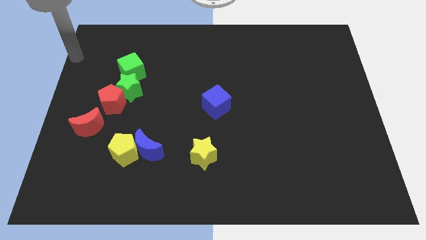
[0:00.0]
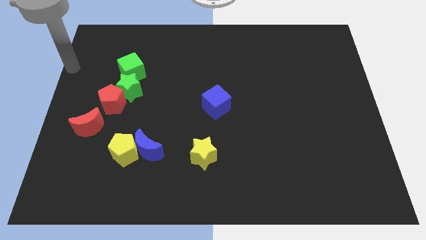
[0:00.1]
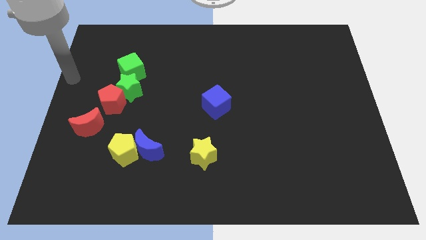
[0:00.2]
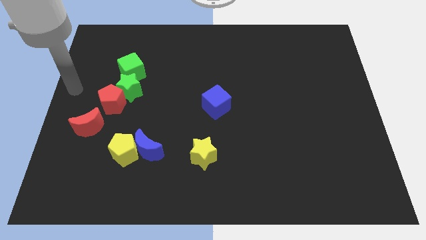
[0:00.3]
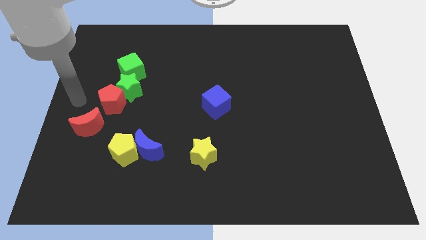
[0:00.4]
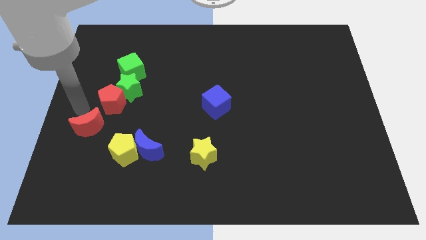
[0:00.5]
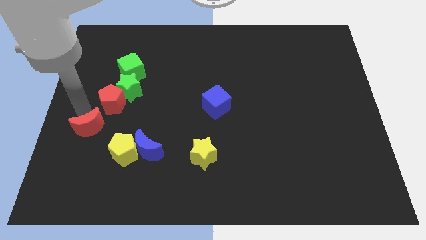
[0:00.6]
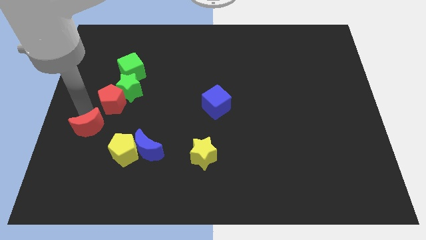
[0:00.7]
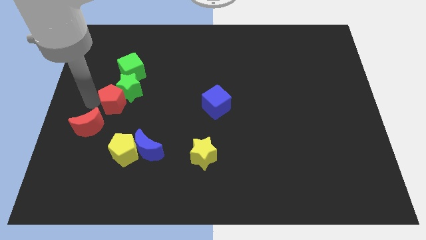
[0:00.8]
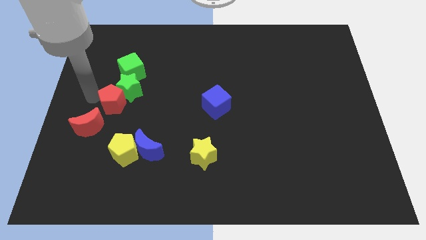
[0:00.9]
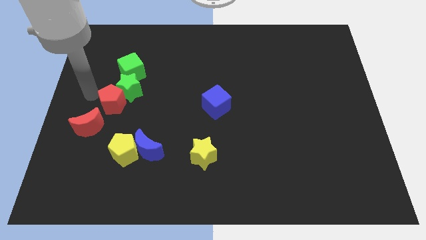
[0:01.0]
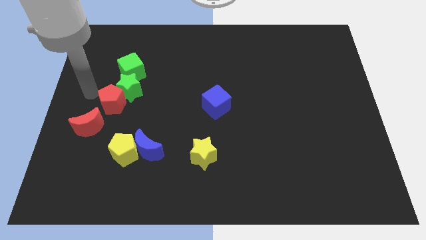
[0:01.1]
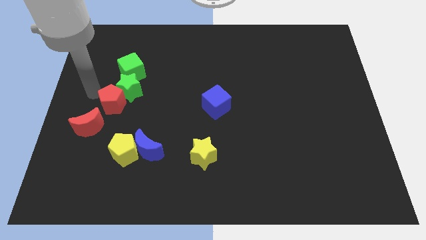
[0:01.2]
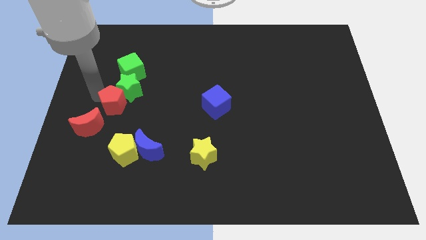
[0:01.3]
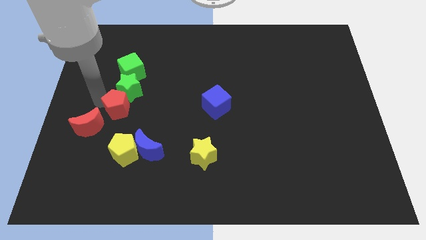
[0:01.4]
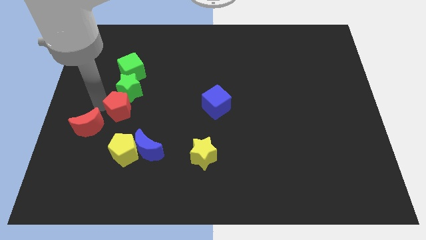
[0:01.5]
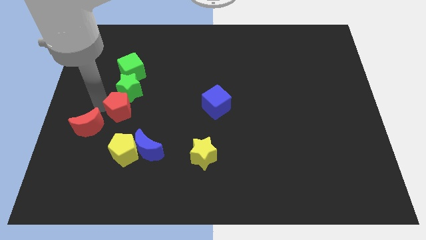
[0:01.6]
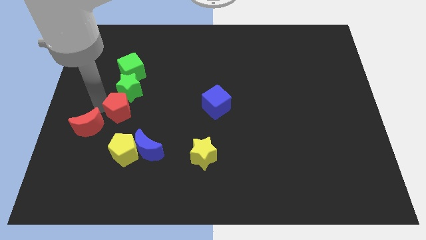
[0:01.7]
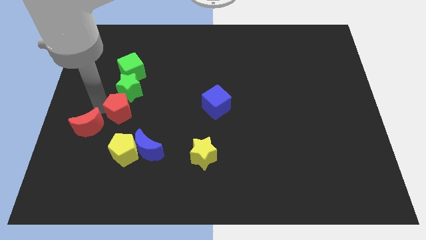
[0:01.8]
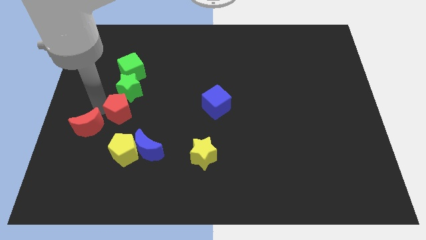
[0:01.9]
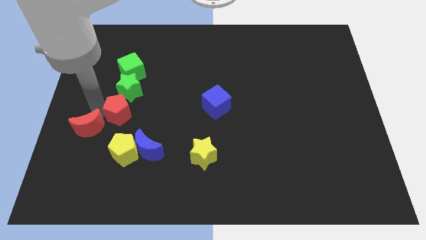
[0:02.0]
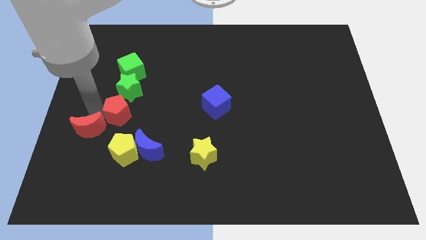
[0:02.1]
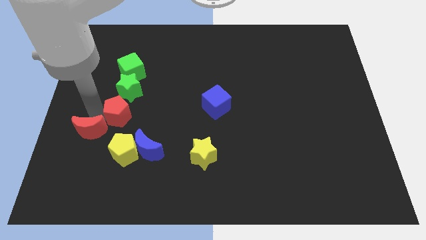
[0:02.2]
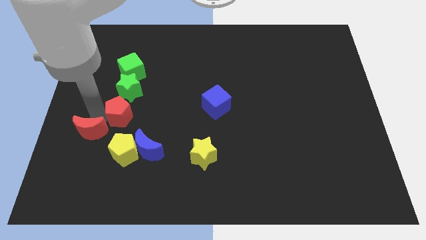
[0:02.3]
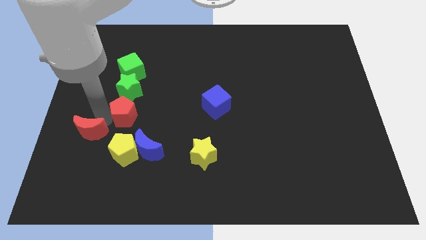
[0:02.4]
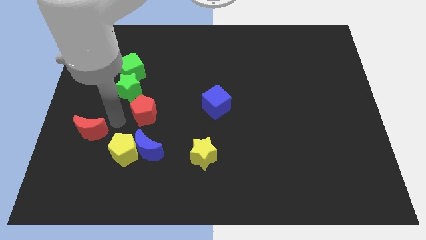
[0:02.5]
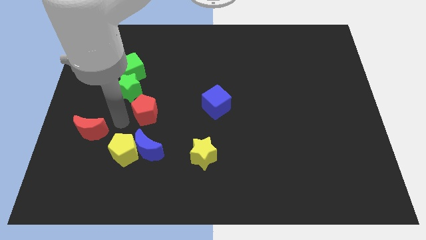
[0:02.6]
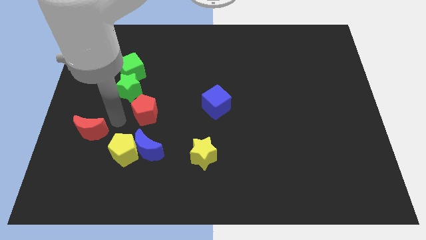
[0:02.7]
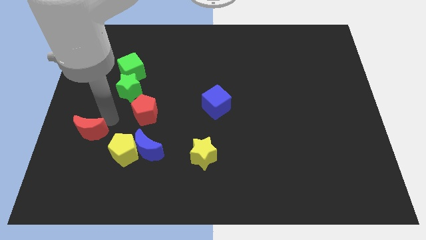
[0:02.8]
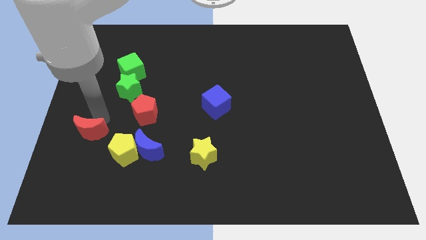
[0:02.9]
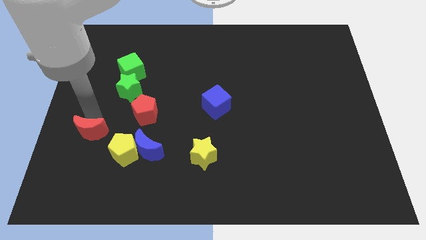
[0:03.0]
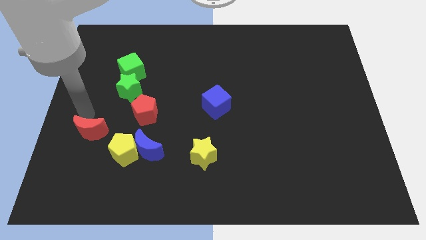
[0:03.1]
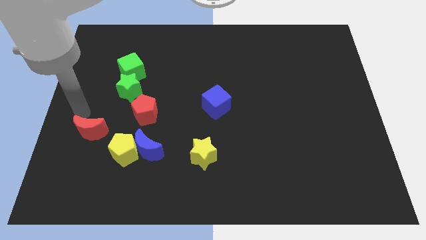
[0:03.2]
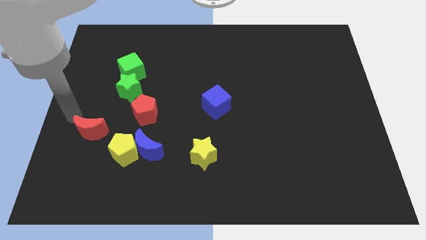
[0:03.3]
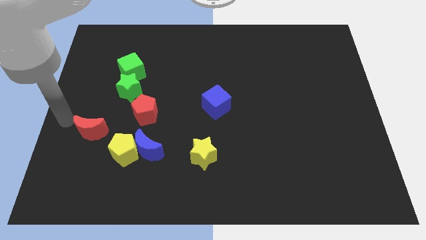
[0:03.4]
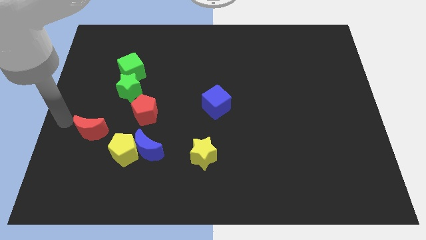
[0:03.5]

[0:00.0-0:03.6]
place red pentagon to the bottom right of green star

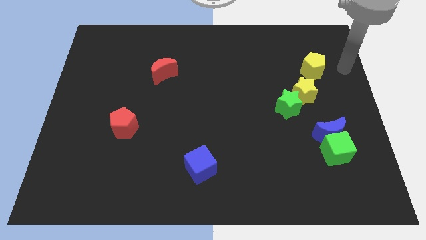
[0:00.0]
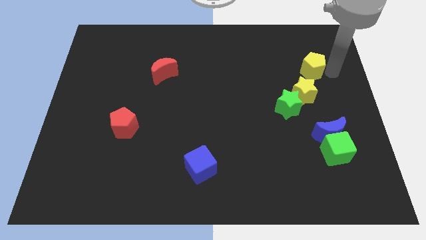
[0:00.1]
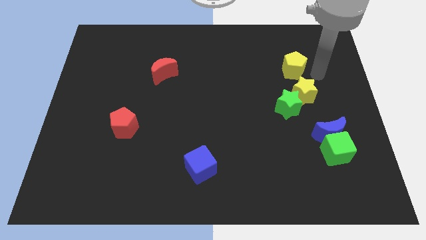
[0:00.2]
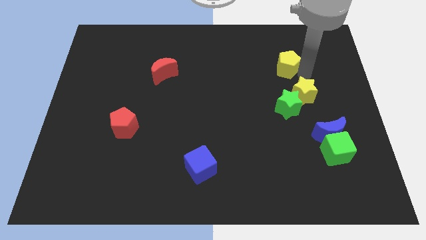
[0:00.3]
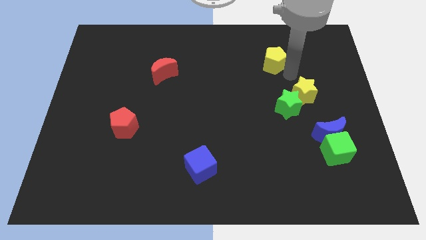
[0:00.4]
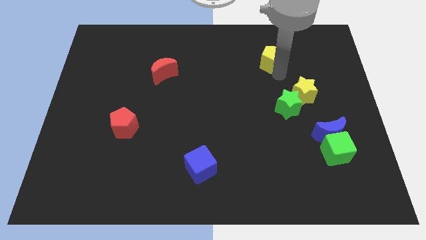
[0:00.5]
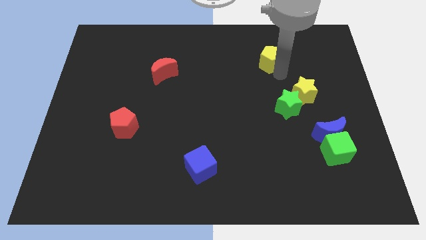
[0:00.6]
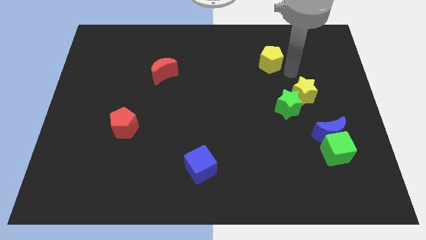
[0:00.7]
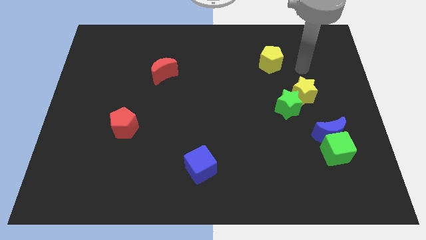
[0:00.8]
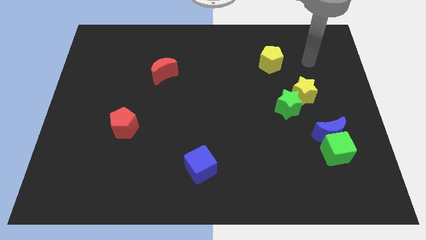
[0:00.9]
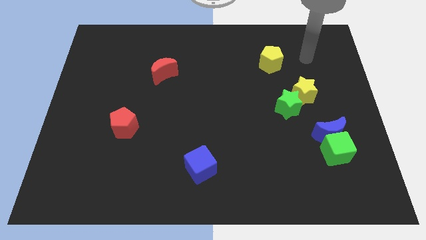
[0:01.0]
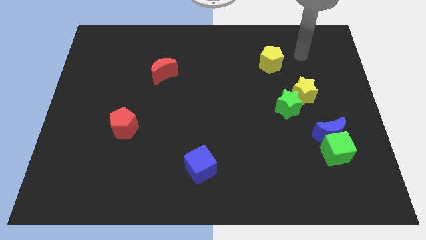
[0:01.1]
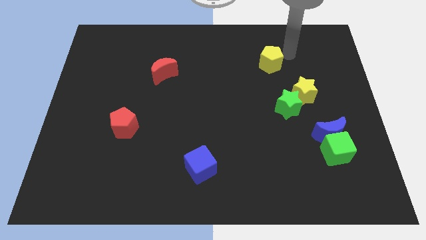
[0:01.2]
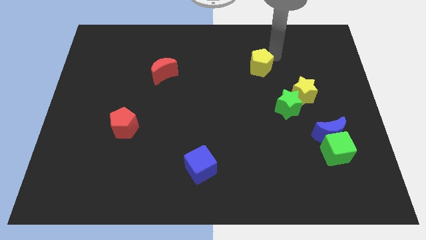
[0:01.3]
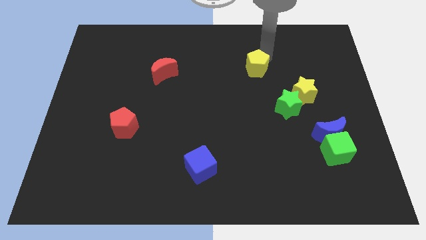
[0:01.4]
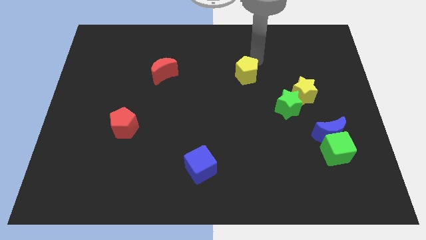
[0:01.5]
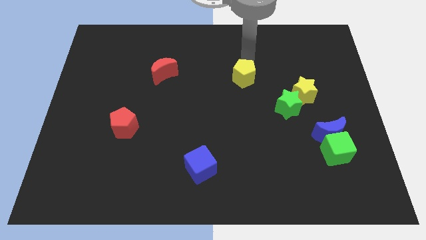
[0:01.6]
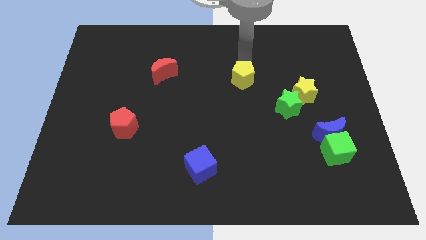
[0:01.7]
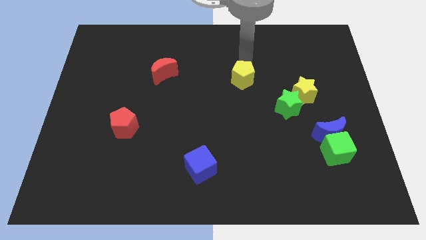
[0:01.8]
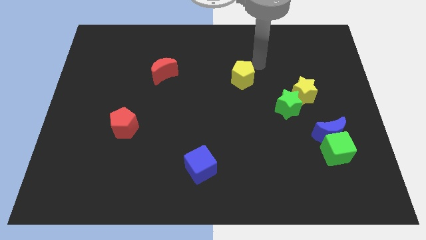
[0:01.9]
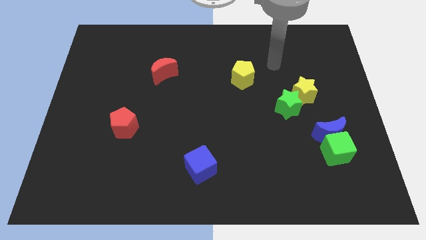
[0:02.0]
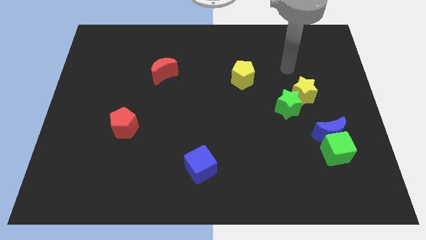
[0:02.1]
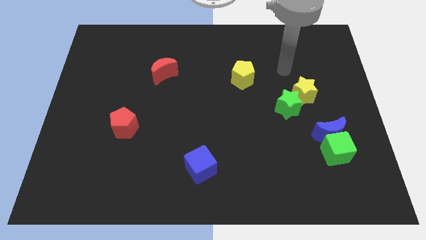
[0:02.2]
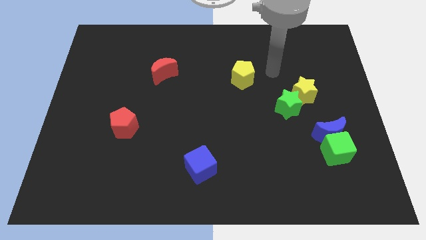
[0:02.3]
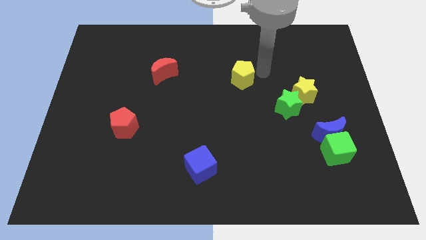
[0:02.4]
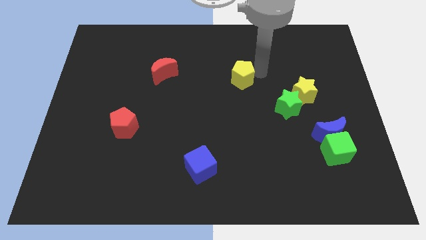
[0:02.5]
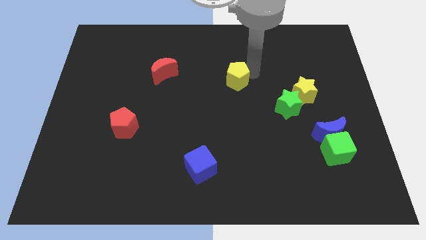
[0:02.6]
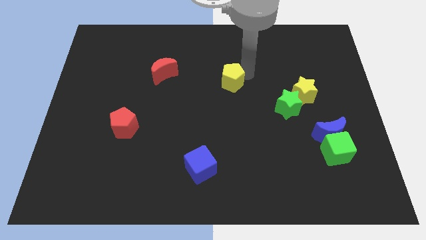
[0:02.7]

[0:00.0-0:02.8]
place the yellow pentagon diagonally left to the green star

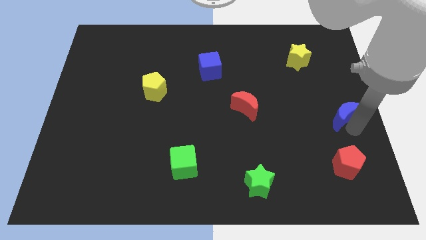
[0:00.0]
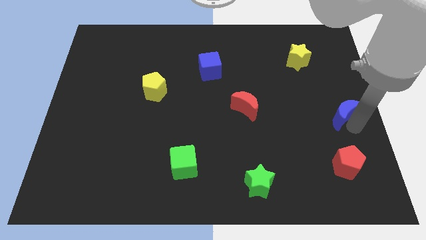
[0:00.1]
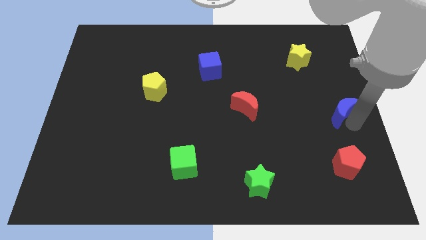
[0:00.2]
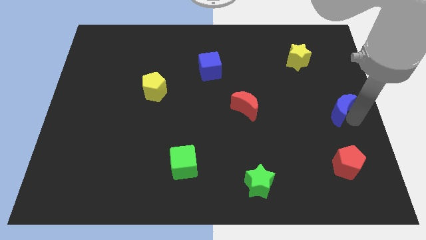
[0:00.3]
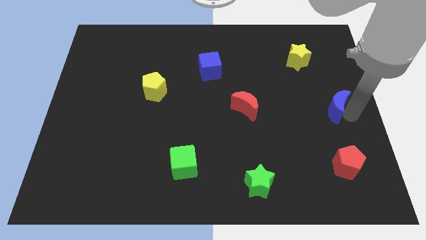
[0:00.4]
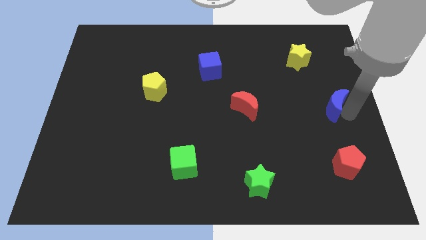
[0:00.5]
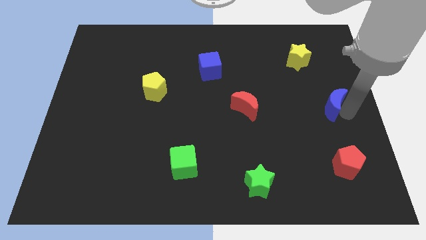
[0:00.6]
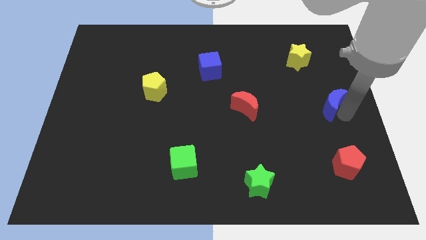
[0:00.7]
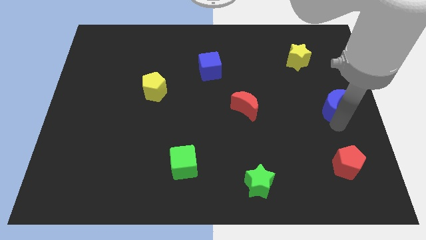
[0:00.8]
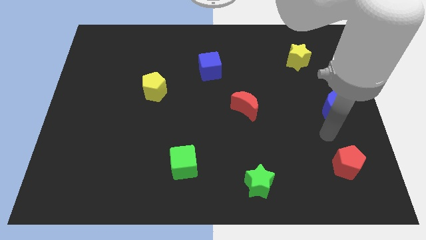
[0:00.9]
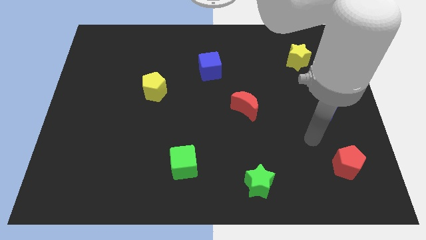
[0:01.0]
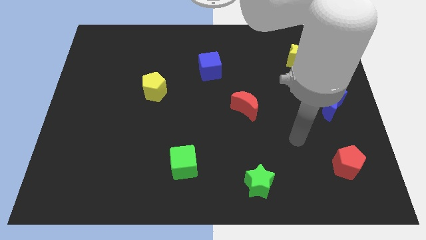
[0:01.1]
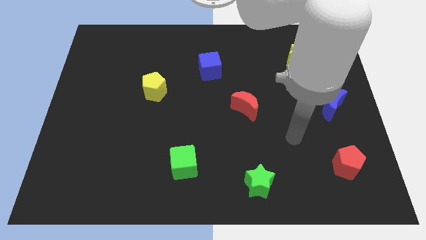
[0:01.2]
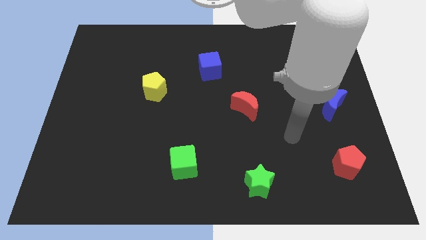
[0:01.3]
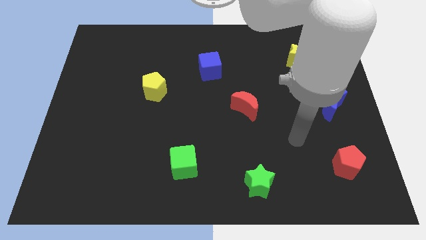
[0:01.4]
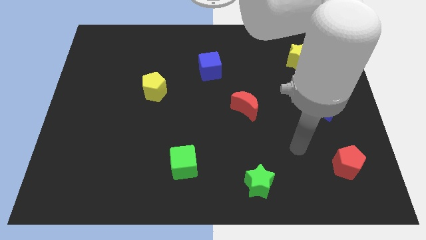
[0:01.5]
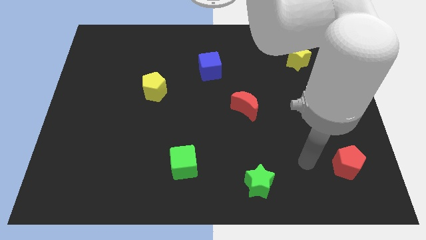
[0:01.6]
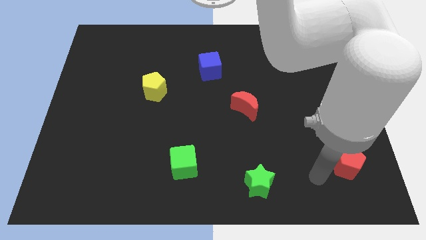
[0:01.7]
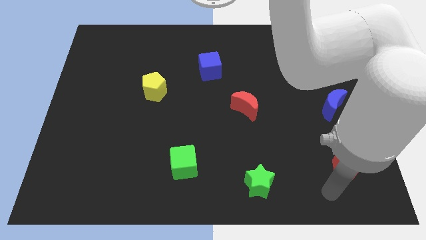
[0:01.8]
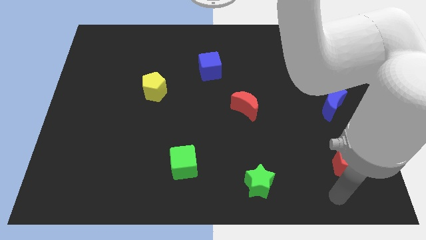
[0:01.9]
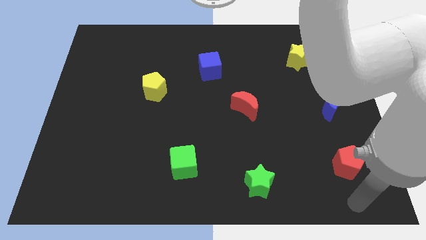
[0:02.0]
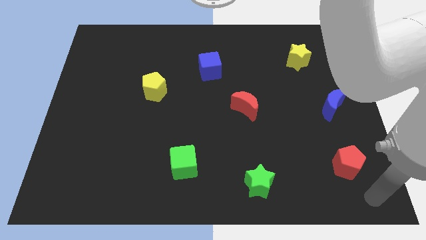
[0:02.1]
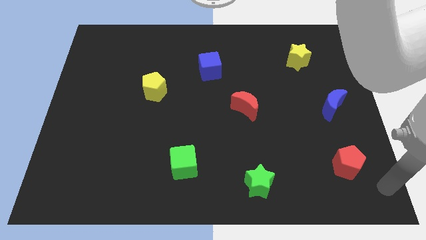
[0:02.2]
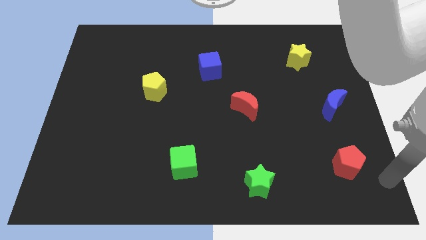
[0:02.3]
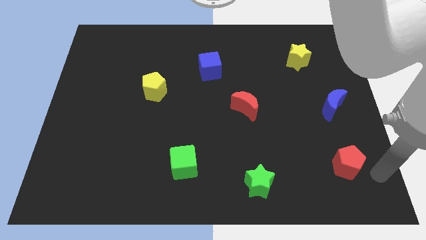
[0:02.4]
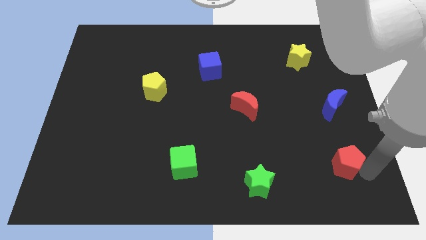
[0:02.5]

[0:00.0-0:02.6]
move your arm away from the blue moon

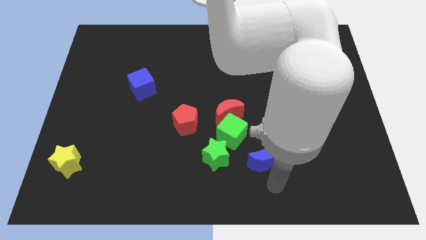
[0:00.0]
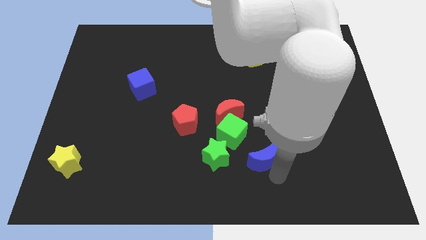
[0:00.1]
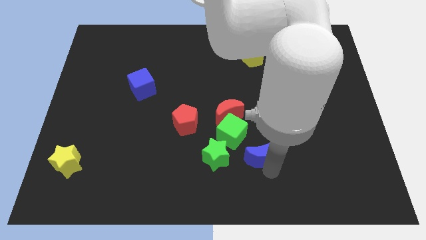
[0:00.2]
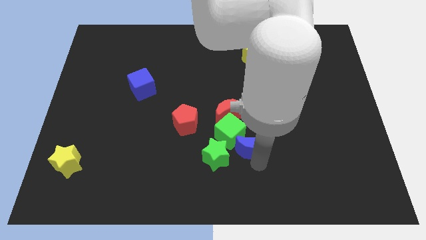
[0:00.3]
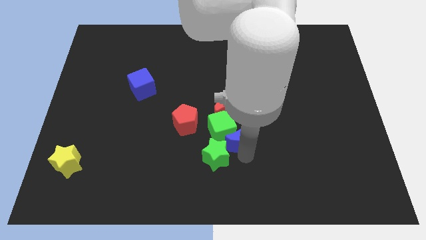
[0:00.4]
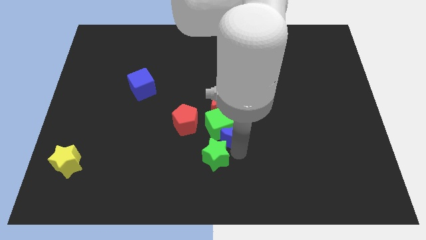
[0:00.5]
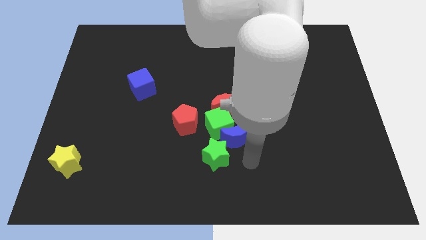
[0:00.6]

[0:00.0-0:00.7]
place blue crescent above green star
